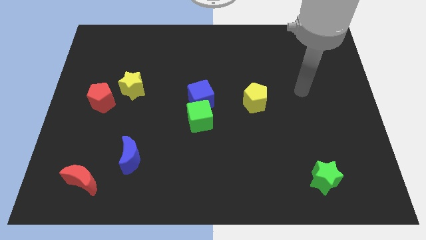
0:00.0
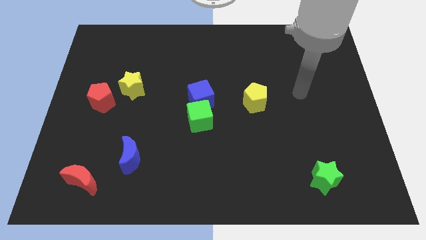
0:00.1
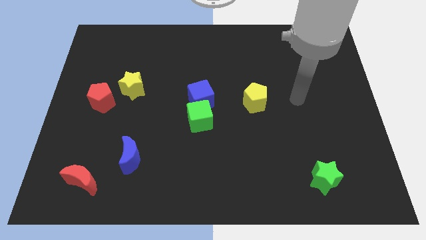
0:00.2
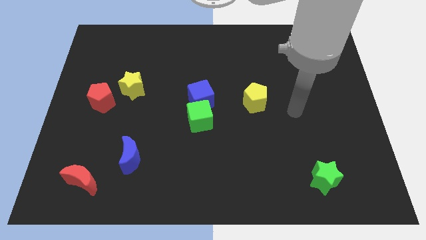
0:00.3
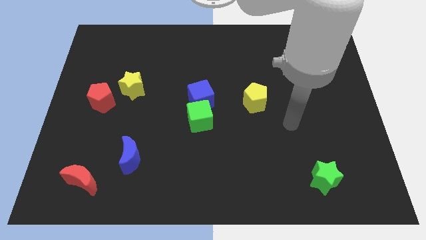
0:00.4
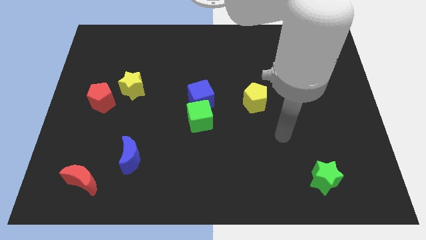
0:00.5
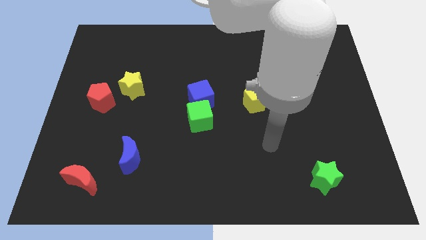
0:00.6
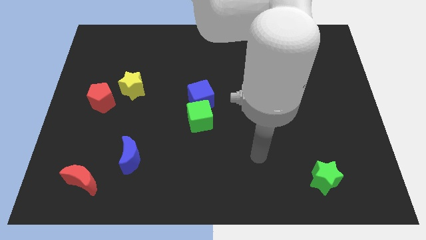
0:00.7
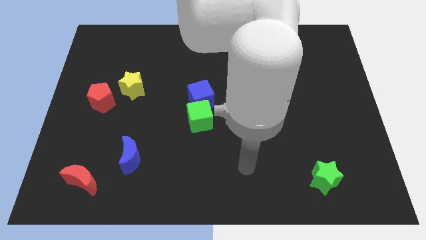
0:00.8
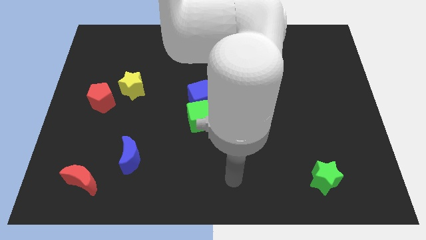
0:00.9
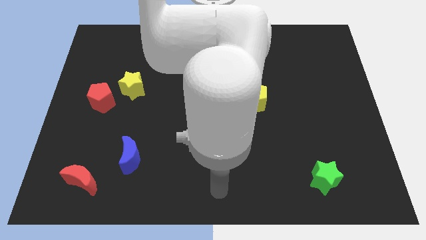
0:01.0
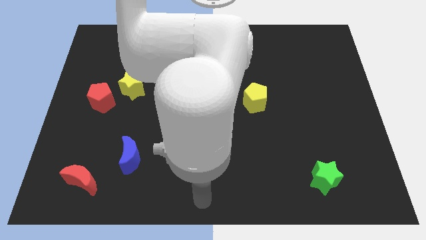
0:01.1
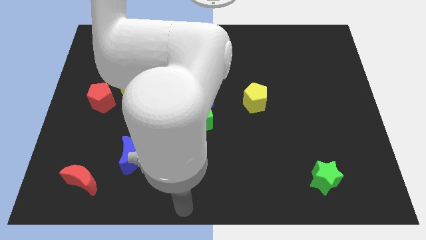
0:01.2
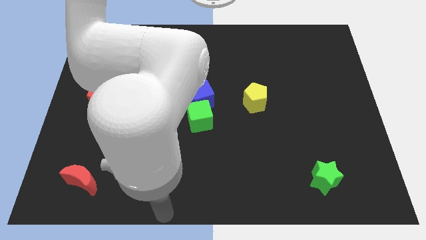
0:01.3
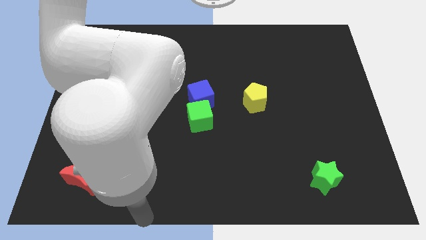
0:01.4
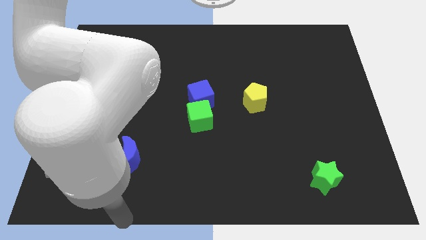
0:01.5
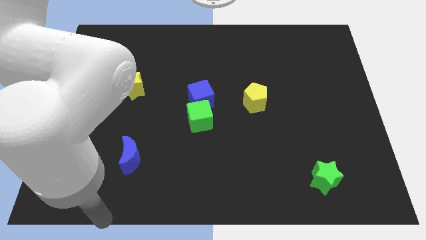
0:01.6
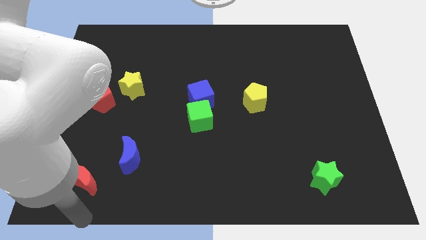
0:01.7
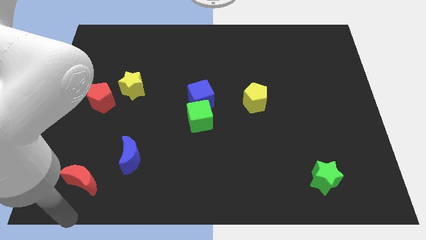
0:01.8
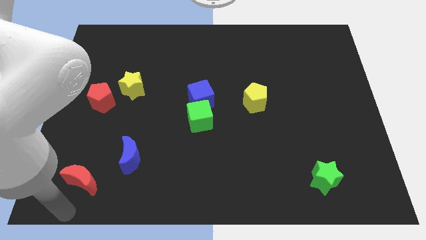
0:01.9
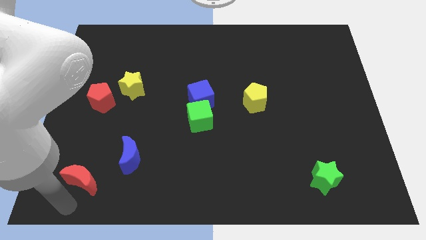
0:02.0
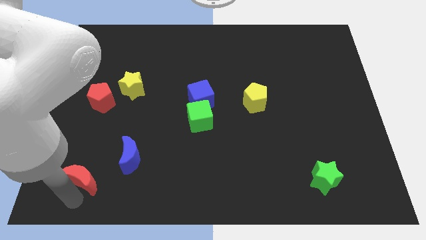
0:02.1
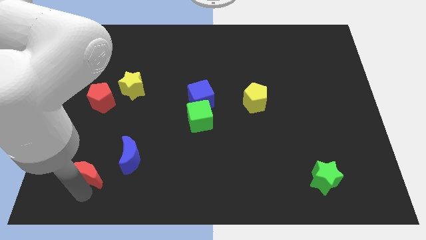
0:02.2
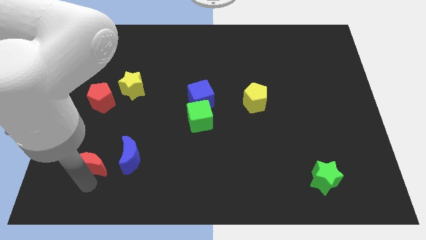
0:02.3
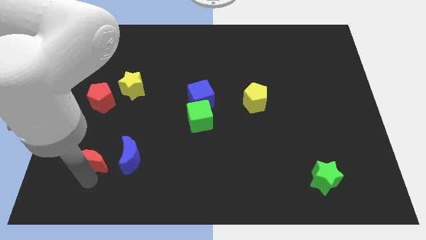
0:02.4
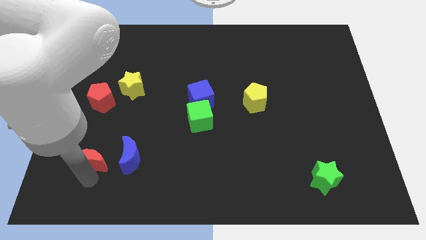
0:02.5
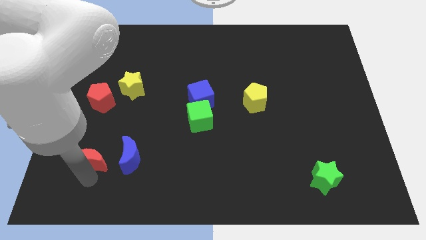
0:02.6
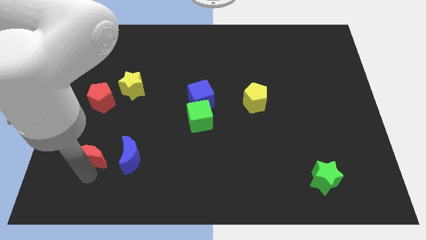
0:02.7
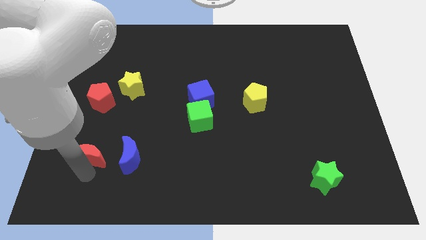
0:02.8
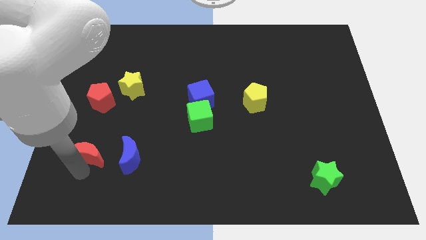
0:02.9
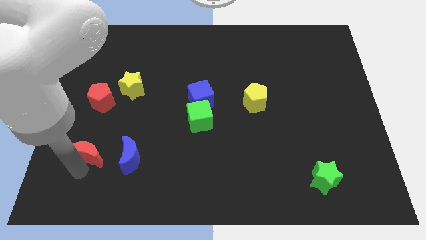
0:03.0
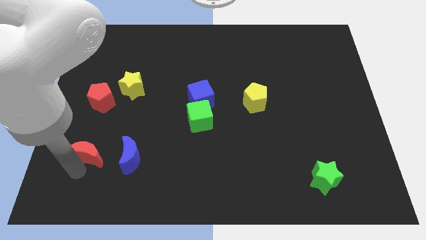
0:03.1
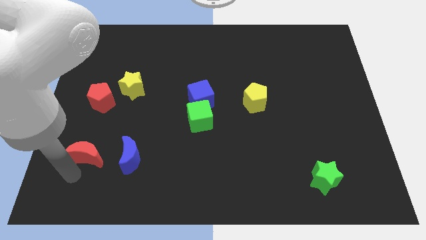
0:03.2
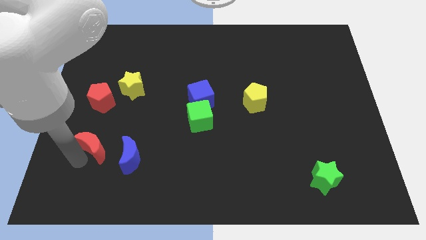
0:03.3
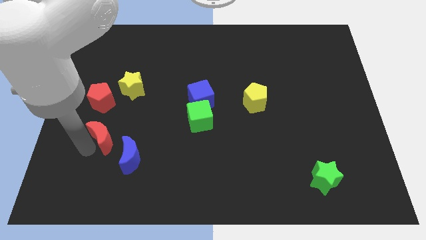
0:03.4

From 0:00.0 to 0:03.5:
push the red moon towards the red pentagon

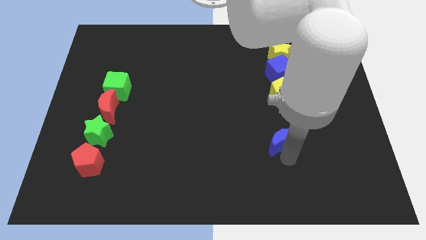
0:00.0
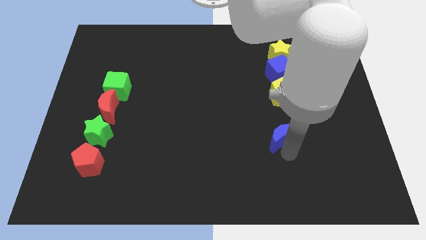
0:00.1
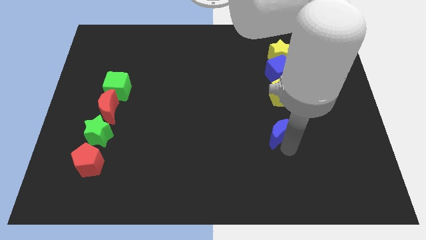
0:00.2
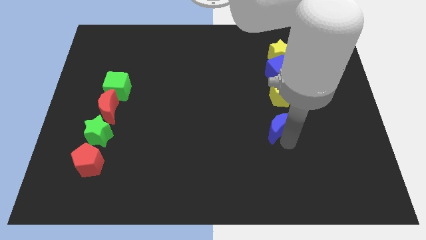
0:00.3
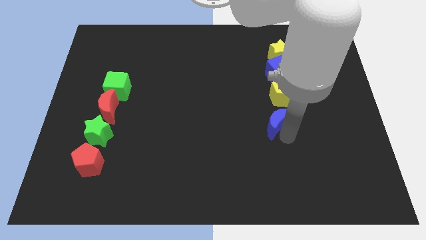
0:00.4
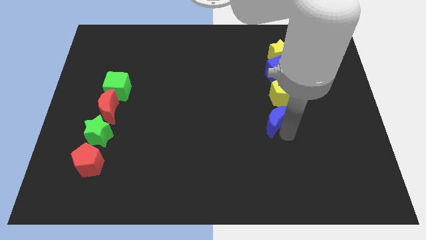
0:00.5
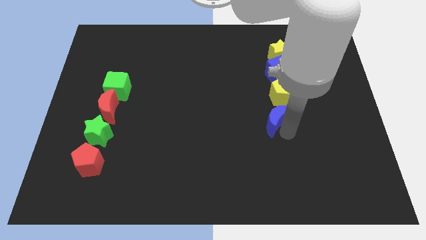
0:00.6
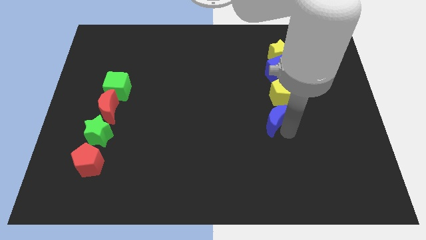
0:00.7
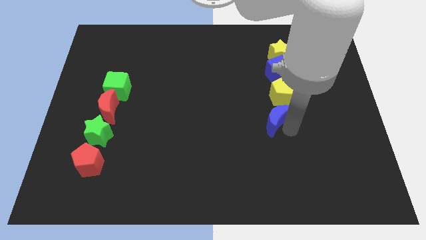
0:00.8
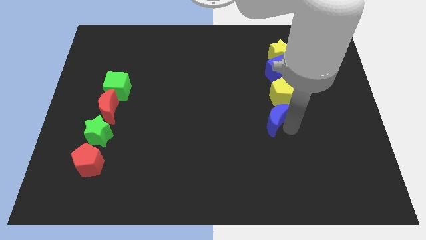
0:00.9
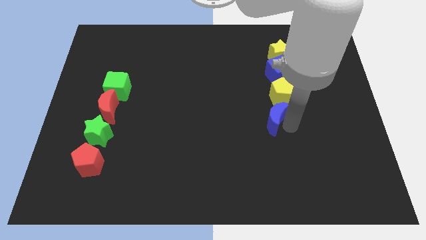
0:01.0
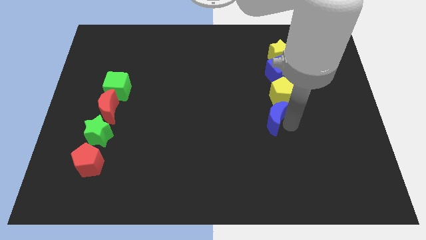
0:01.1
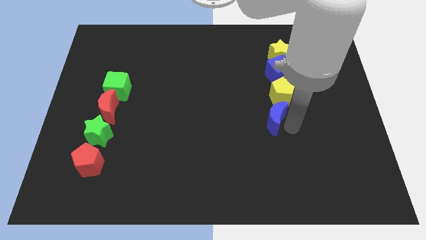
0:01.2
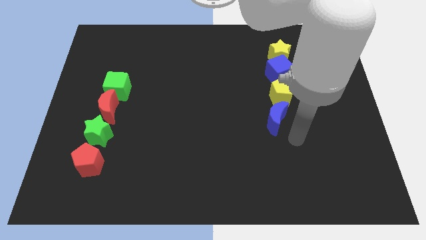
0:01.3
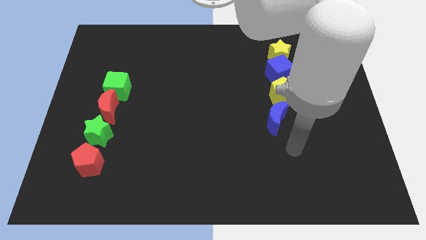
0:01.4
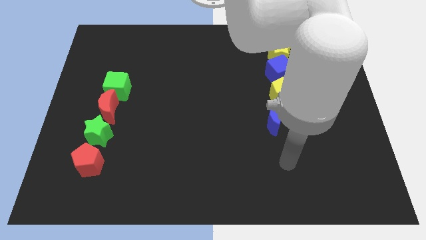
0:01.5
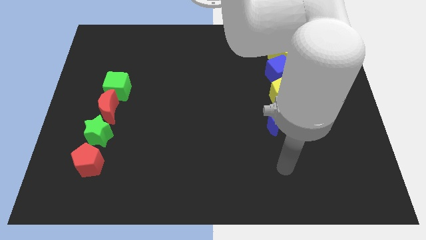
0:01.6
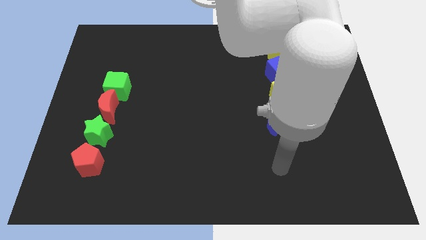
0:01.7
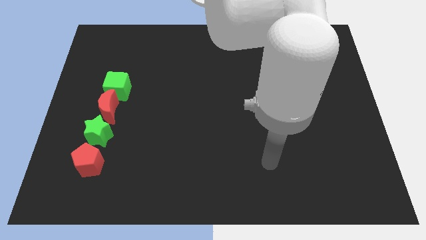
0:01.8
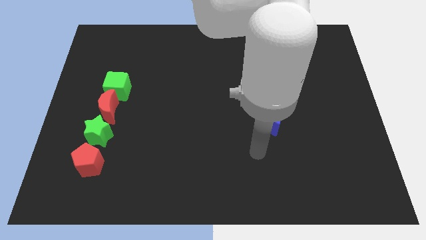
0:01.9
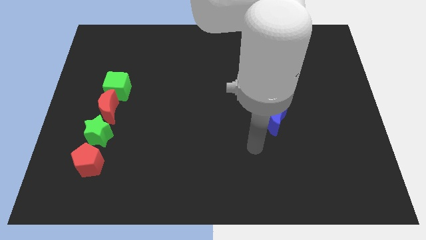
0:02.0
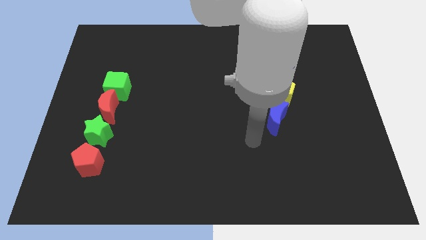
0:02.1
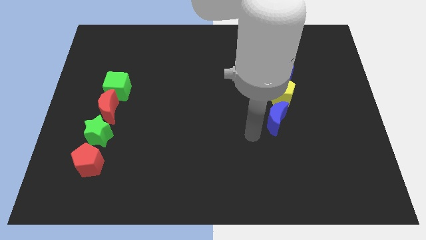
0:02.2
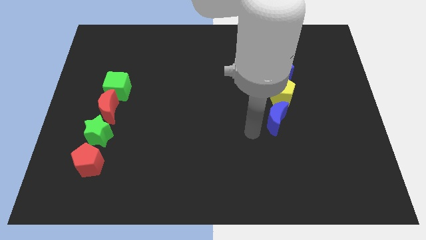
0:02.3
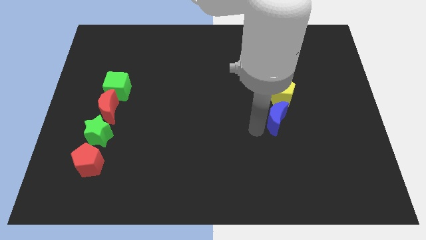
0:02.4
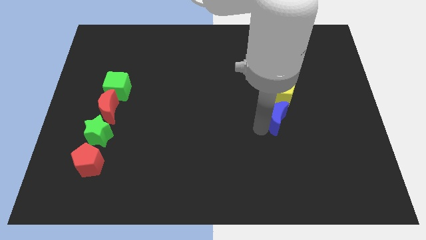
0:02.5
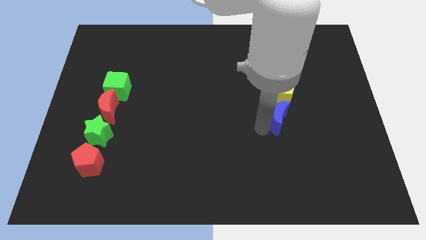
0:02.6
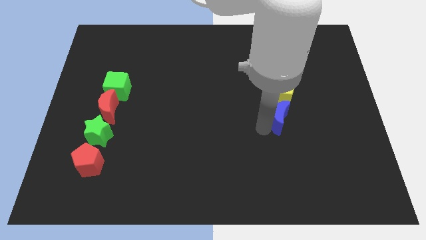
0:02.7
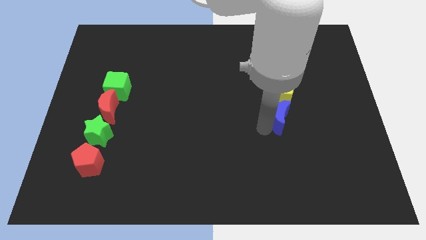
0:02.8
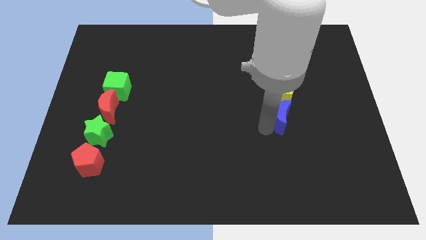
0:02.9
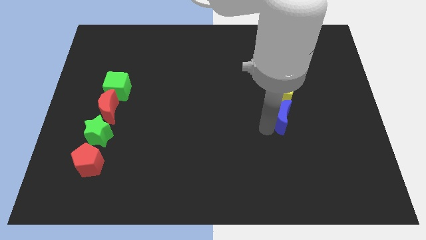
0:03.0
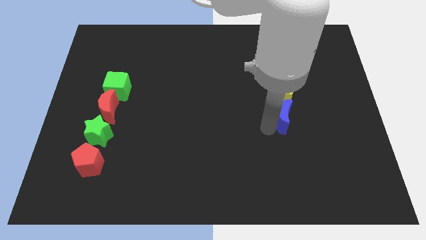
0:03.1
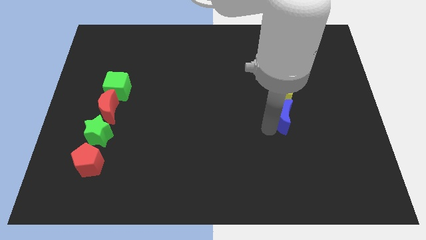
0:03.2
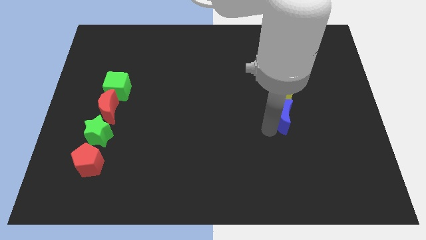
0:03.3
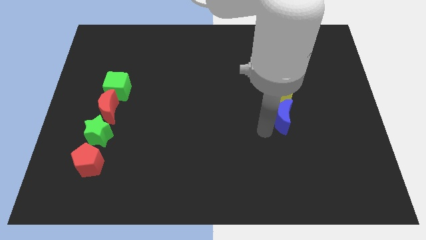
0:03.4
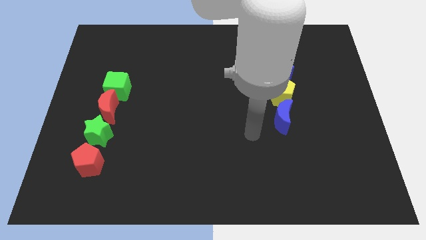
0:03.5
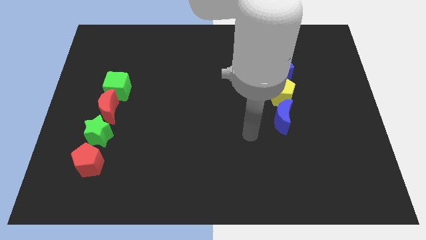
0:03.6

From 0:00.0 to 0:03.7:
place the blue moon below the yellow pentagon

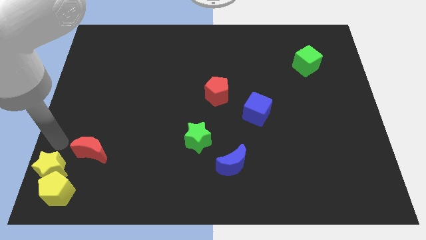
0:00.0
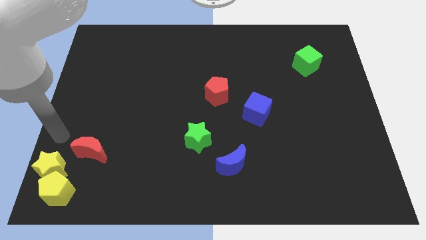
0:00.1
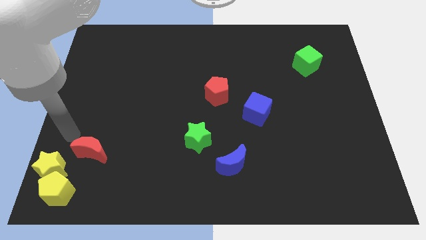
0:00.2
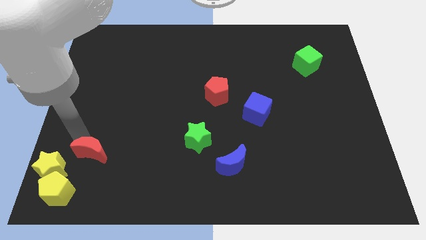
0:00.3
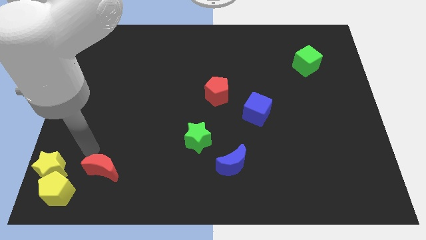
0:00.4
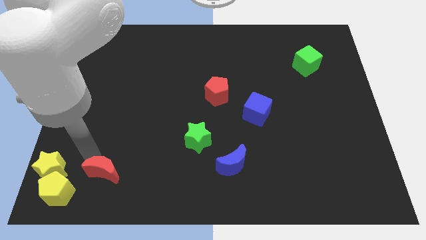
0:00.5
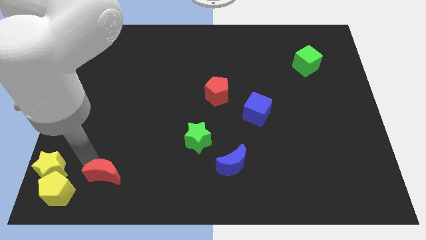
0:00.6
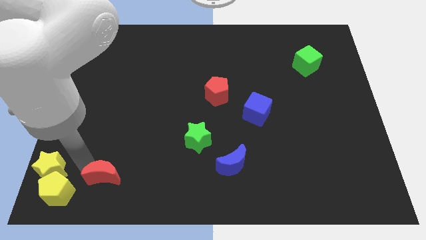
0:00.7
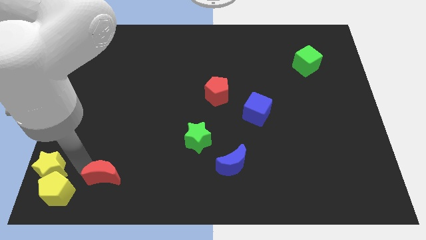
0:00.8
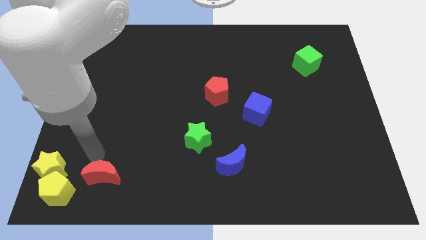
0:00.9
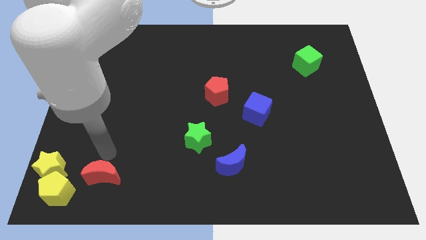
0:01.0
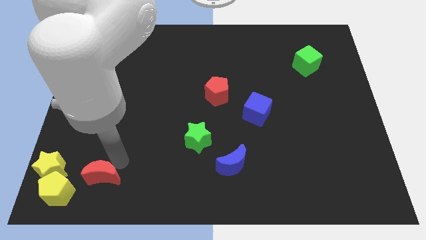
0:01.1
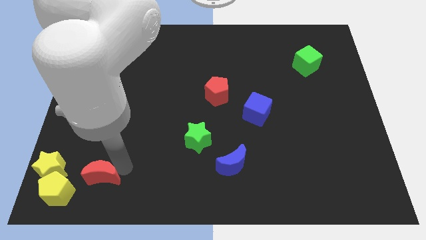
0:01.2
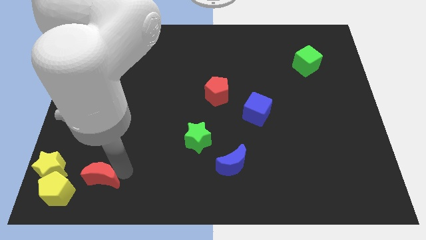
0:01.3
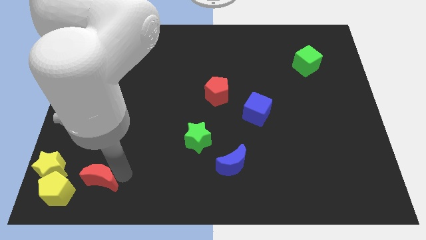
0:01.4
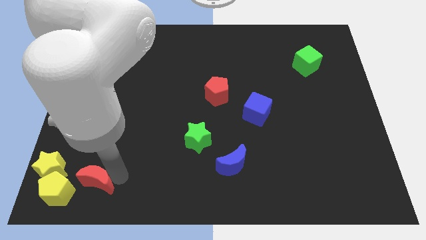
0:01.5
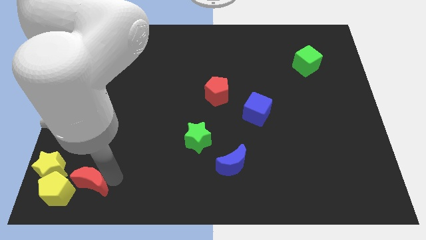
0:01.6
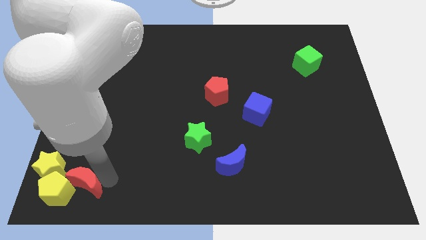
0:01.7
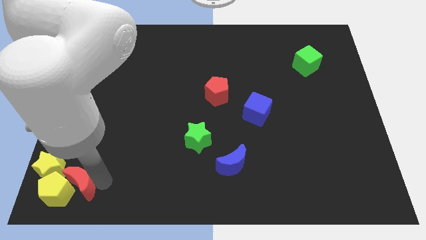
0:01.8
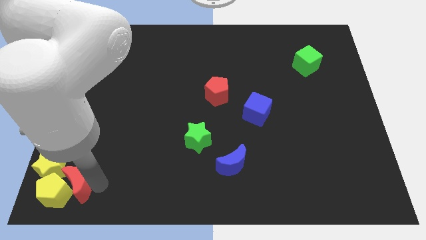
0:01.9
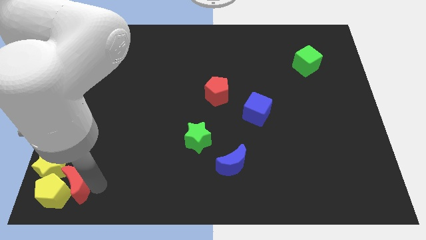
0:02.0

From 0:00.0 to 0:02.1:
push the red moon into the yellow pentagon
